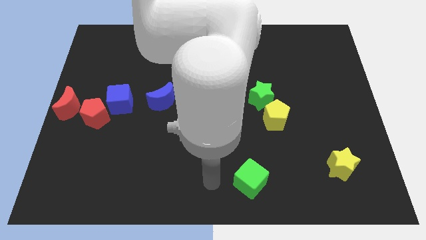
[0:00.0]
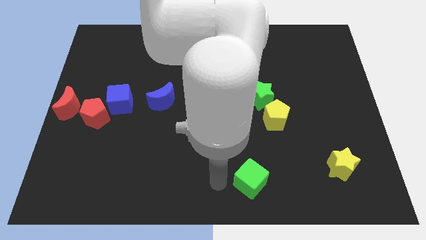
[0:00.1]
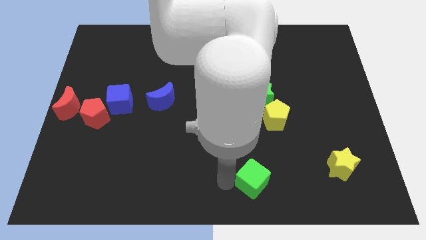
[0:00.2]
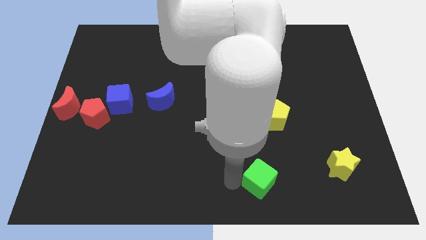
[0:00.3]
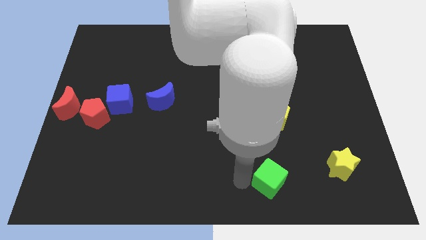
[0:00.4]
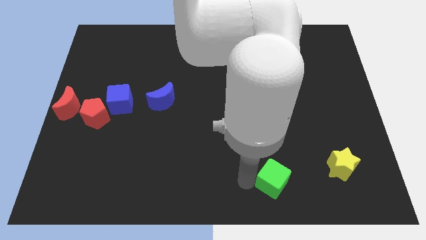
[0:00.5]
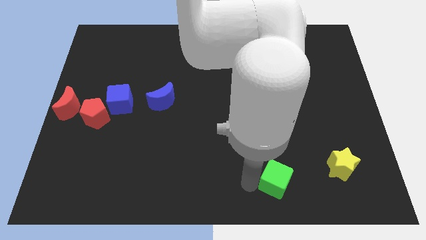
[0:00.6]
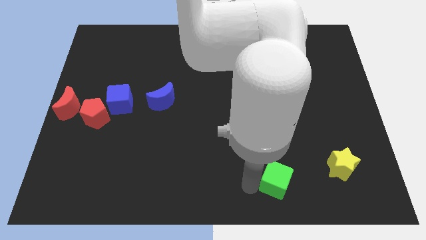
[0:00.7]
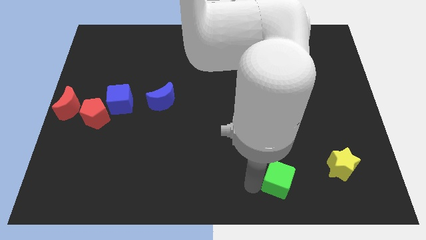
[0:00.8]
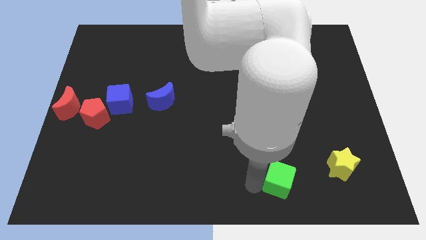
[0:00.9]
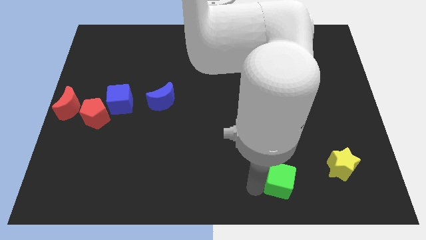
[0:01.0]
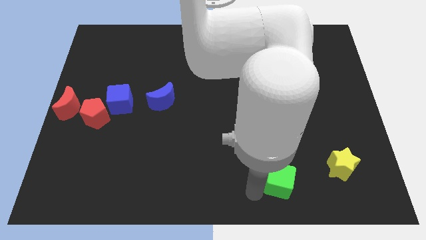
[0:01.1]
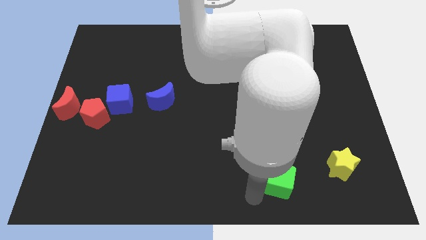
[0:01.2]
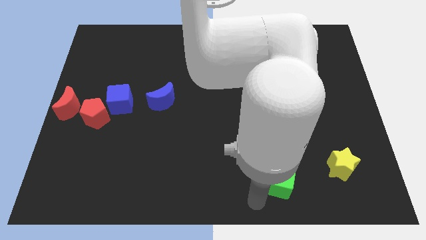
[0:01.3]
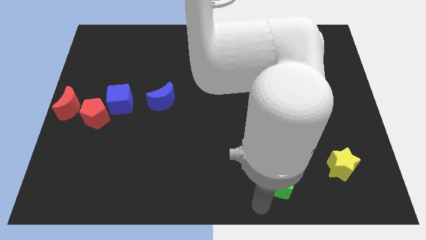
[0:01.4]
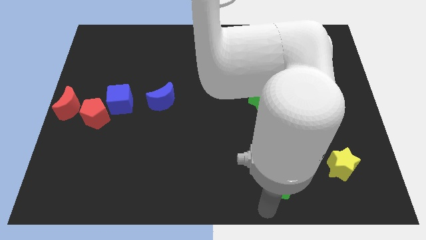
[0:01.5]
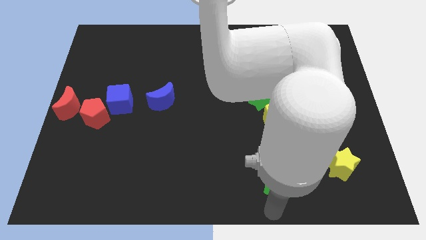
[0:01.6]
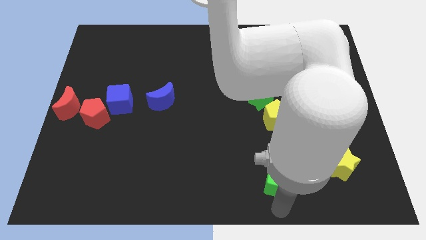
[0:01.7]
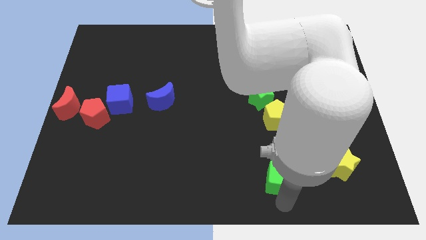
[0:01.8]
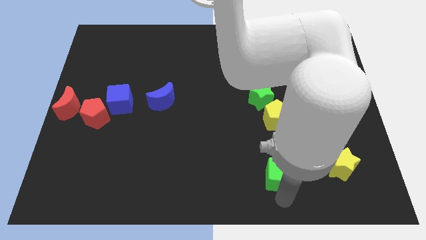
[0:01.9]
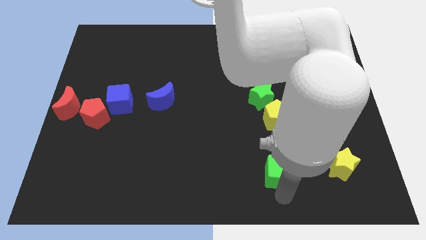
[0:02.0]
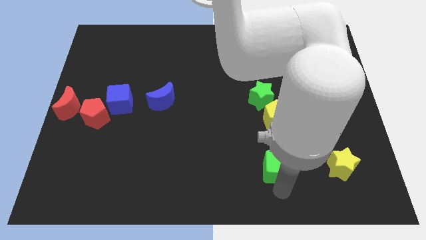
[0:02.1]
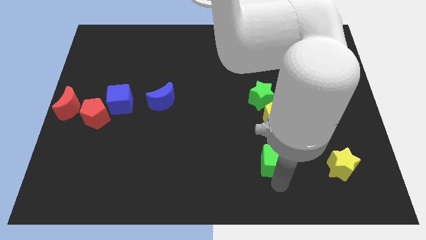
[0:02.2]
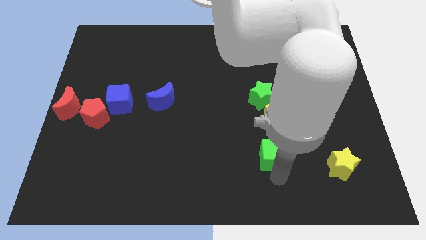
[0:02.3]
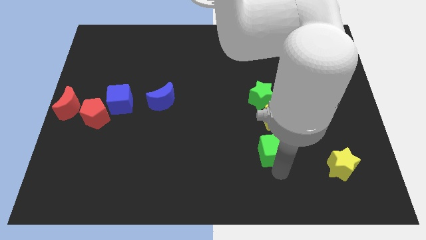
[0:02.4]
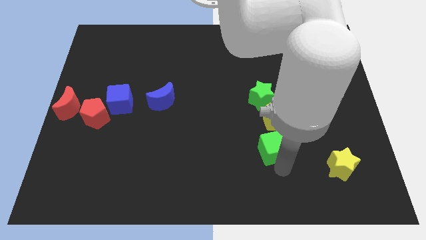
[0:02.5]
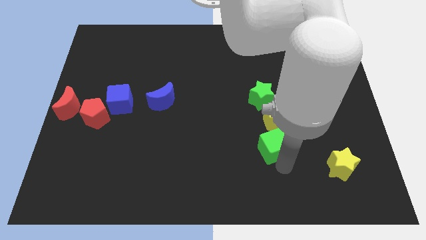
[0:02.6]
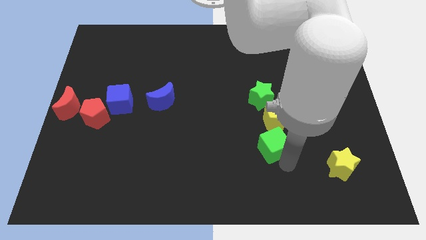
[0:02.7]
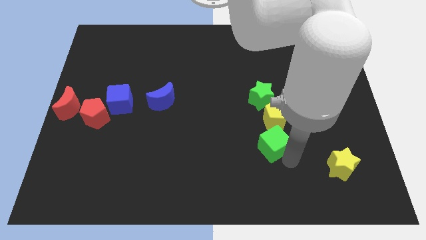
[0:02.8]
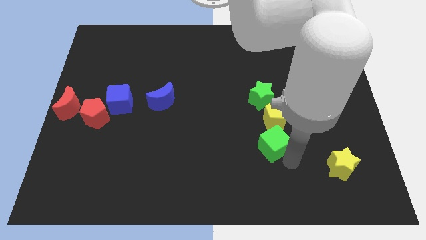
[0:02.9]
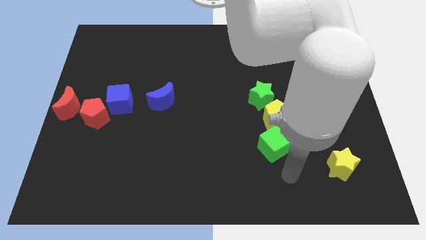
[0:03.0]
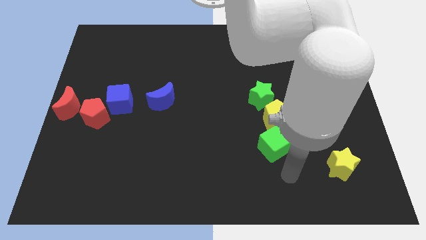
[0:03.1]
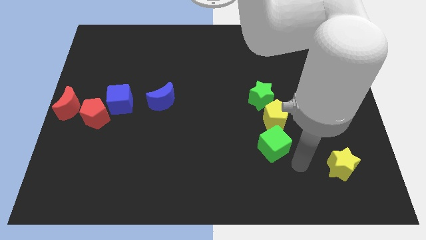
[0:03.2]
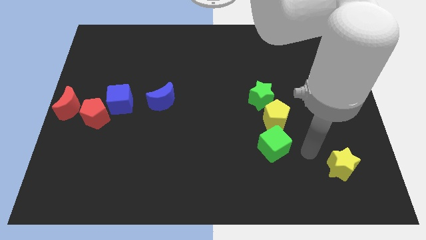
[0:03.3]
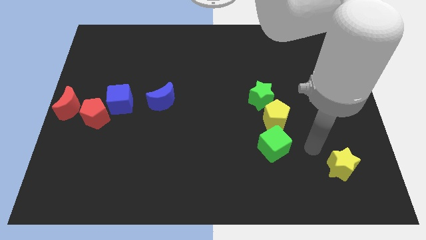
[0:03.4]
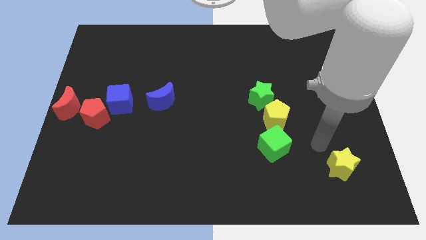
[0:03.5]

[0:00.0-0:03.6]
place the green cube below the yellow pentagon

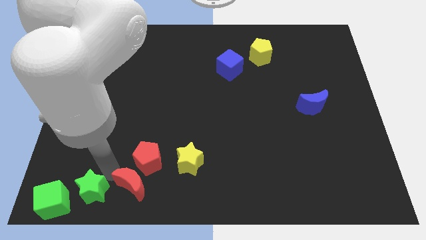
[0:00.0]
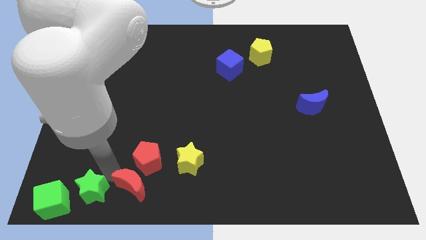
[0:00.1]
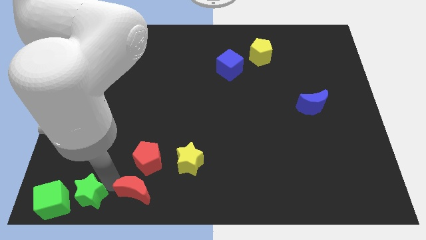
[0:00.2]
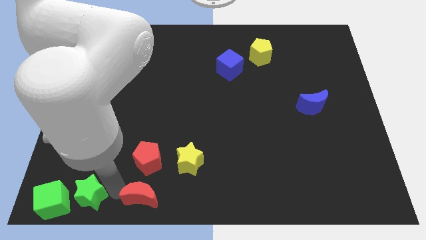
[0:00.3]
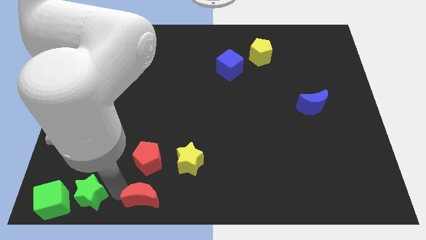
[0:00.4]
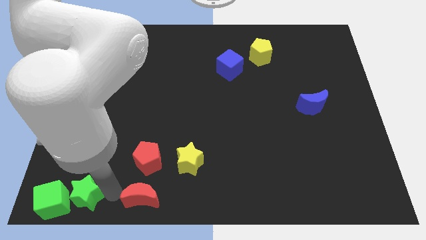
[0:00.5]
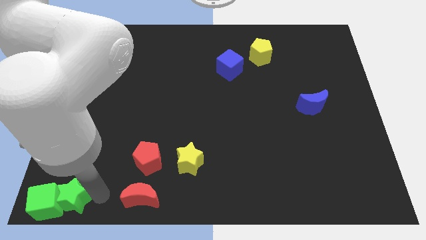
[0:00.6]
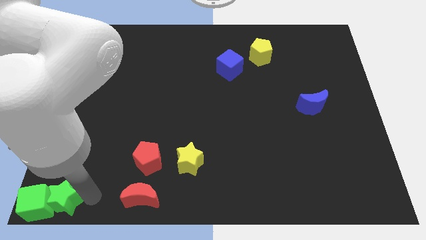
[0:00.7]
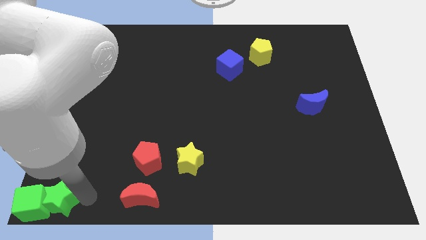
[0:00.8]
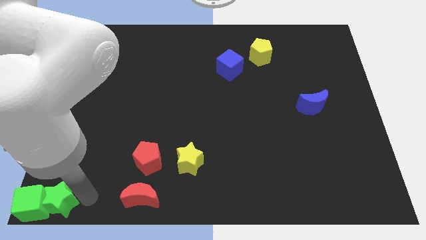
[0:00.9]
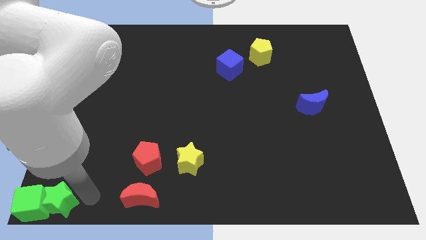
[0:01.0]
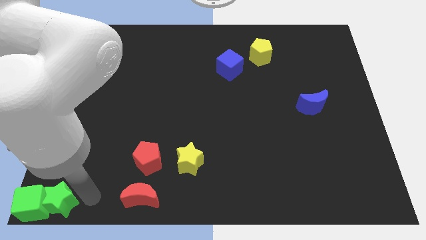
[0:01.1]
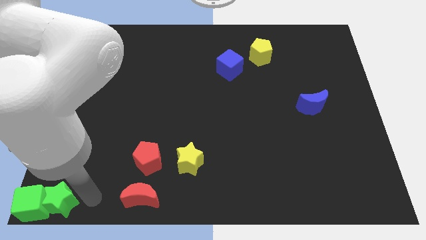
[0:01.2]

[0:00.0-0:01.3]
push green blocks to the bottom left corner of the board

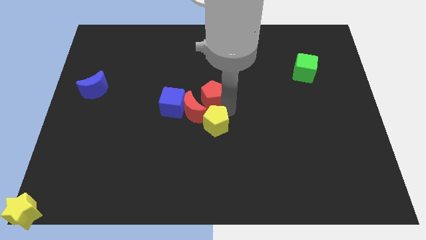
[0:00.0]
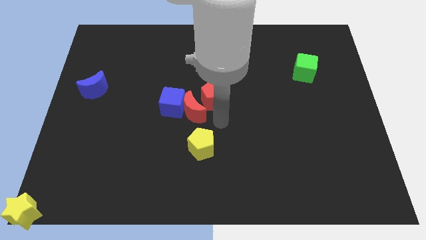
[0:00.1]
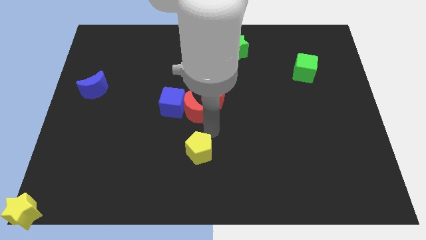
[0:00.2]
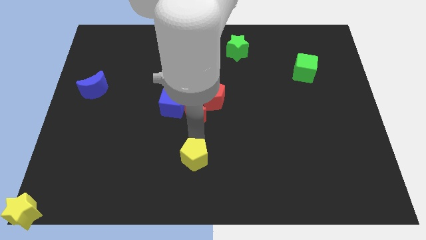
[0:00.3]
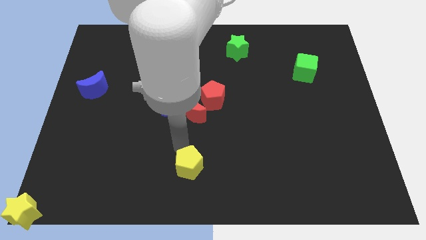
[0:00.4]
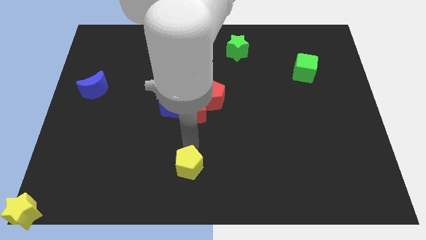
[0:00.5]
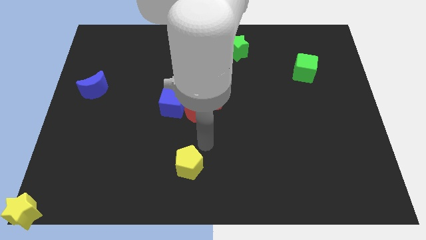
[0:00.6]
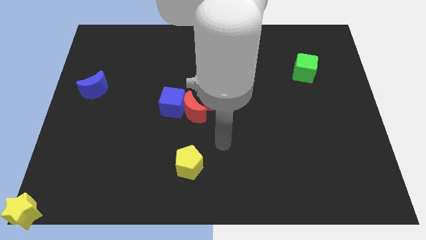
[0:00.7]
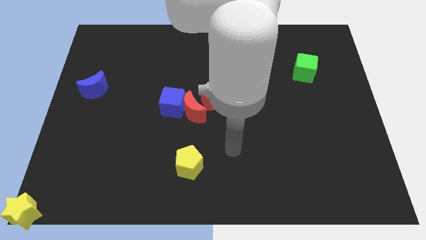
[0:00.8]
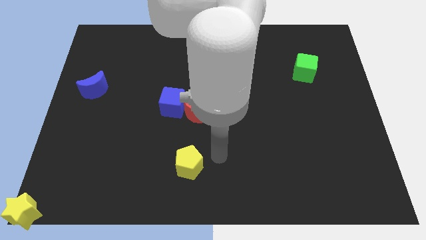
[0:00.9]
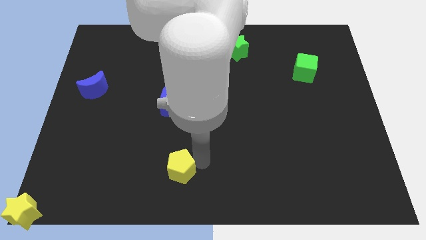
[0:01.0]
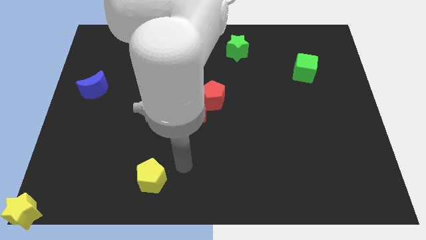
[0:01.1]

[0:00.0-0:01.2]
move the yellow pentagon towards the bottom left

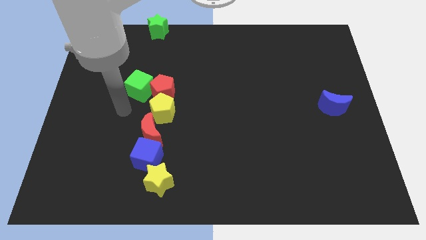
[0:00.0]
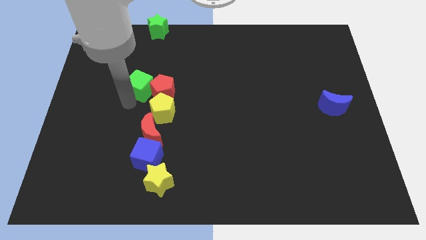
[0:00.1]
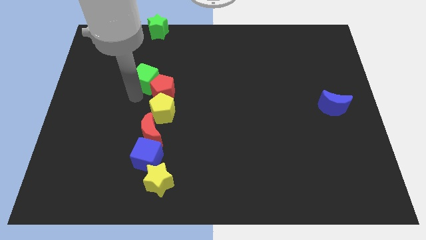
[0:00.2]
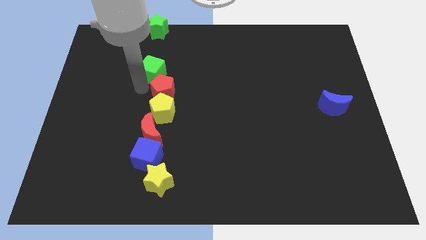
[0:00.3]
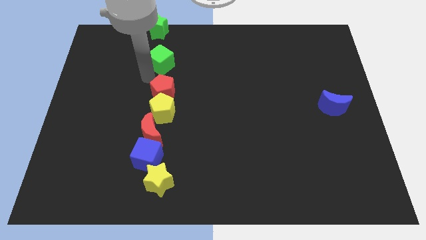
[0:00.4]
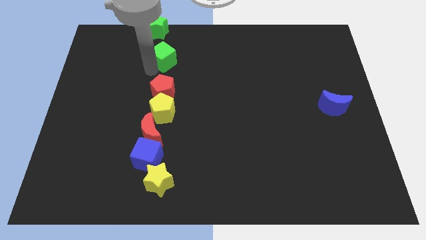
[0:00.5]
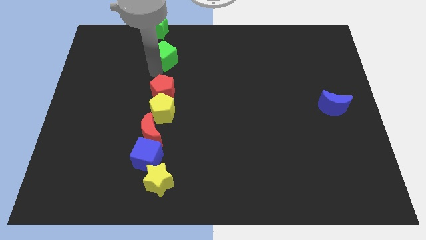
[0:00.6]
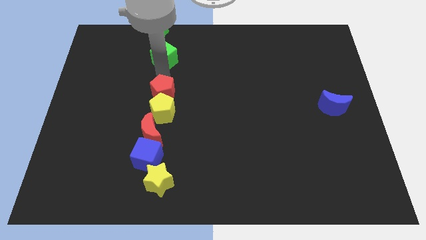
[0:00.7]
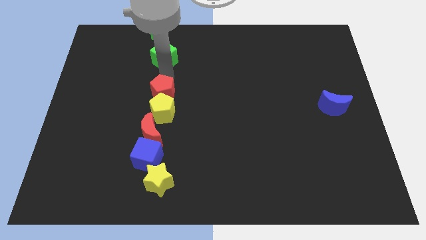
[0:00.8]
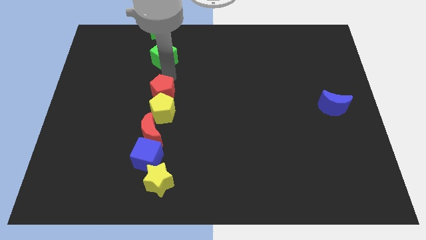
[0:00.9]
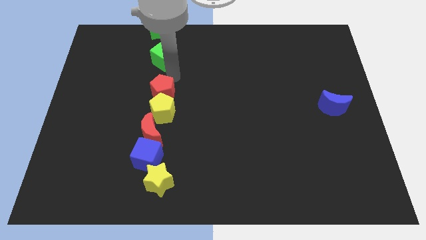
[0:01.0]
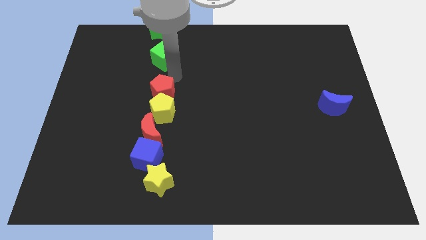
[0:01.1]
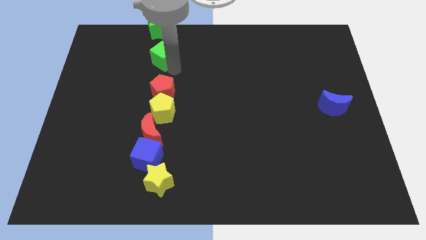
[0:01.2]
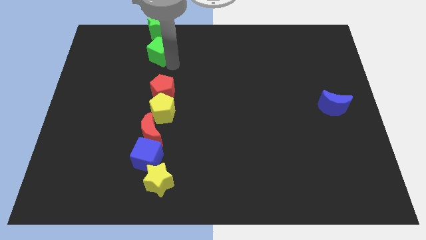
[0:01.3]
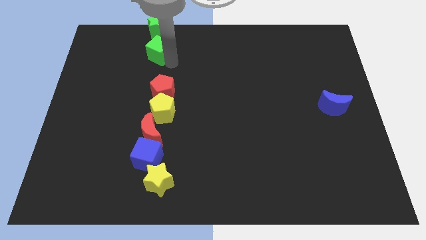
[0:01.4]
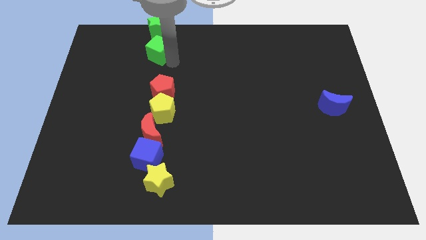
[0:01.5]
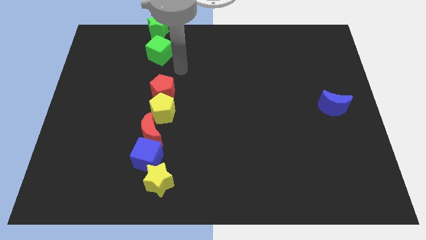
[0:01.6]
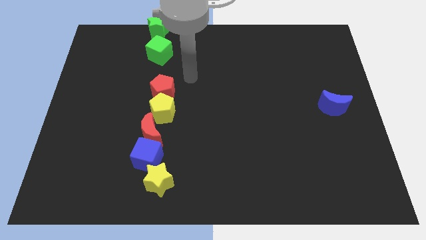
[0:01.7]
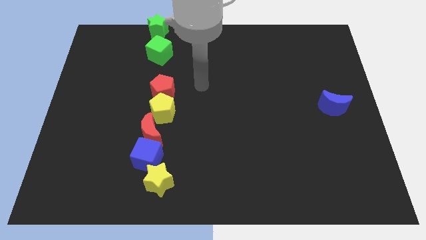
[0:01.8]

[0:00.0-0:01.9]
separate green cube from the red pentagon

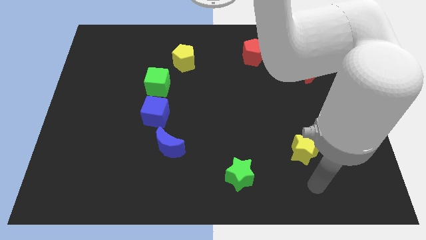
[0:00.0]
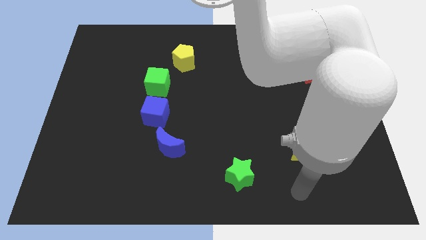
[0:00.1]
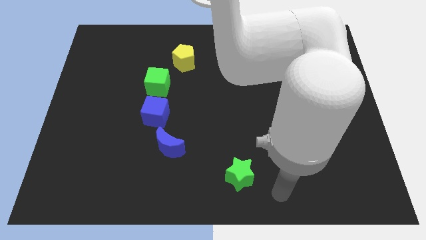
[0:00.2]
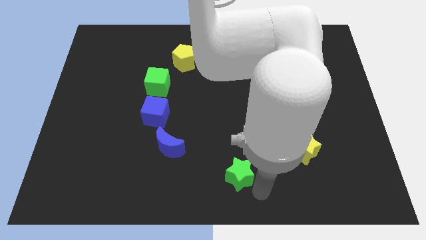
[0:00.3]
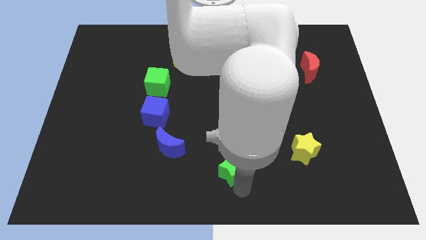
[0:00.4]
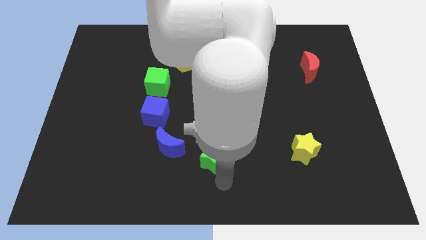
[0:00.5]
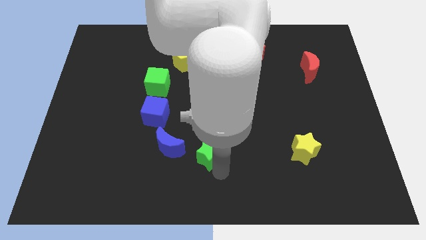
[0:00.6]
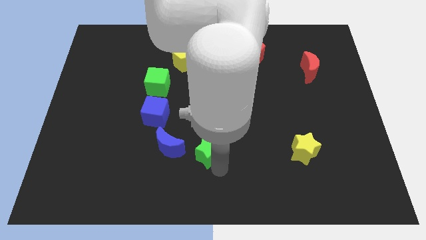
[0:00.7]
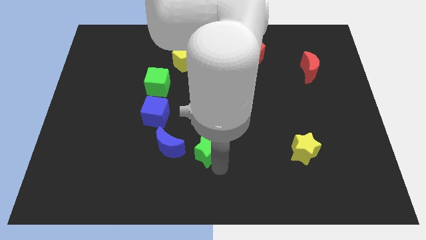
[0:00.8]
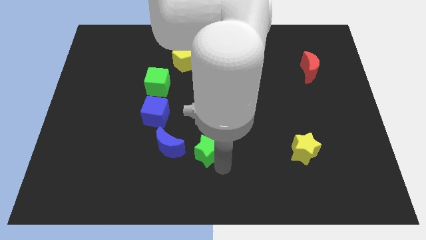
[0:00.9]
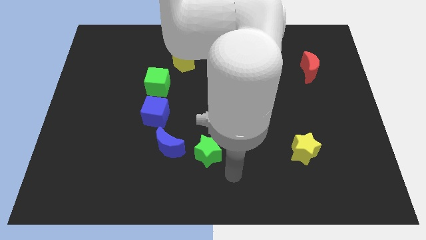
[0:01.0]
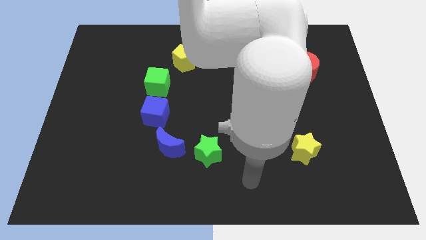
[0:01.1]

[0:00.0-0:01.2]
push the green star close to the blue moon
